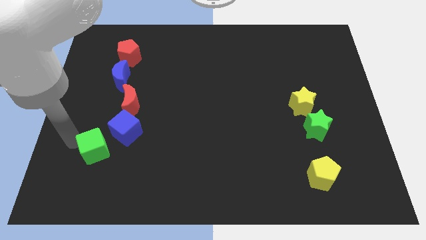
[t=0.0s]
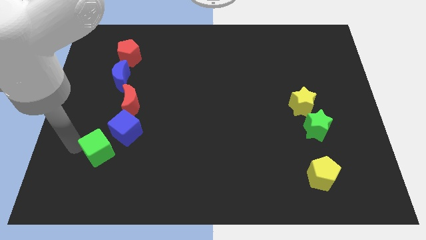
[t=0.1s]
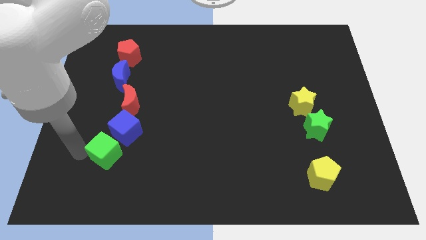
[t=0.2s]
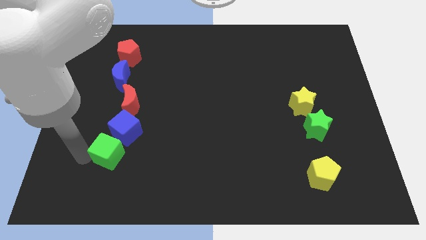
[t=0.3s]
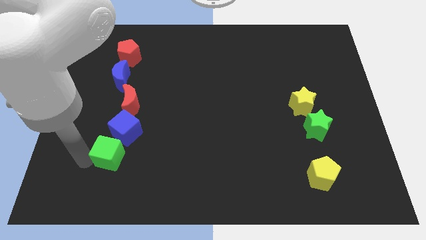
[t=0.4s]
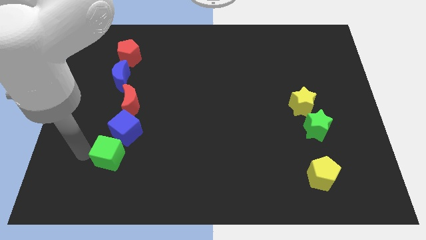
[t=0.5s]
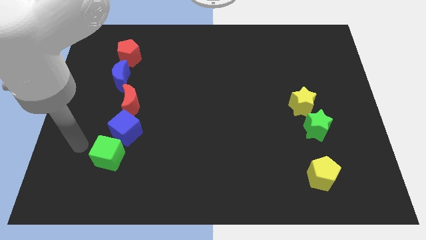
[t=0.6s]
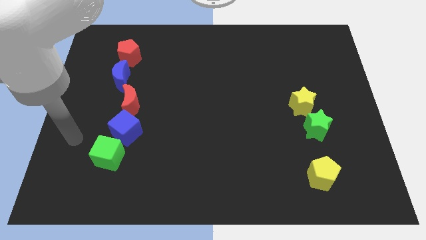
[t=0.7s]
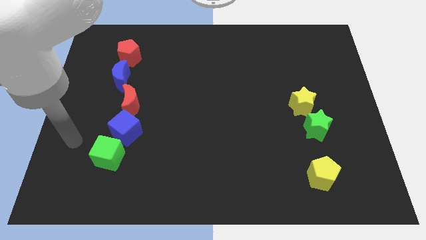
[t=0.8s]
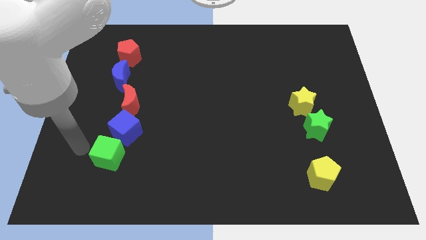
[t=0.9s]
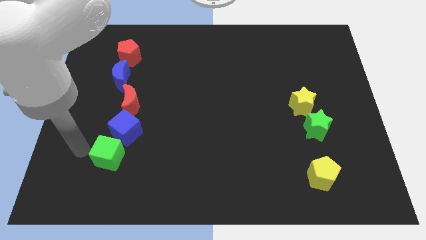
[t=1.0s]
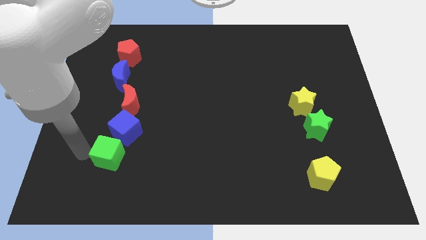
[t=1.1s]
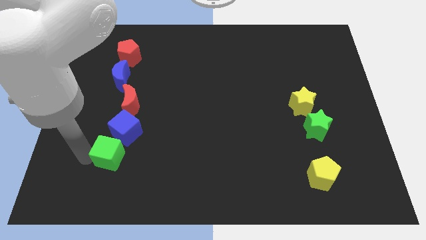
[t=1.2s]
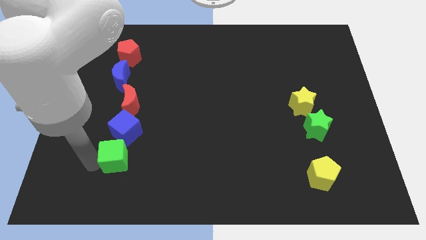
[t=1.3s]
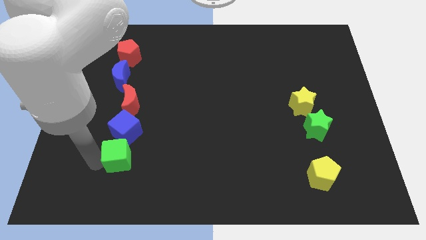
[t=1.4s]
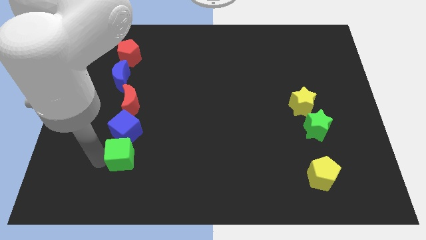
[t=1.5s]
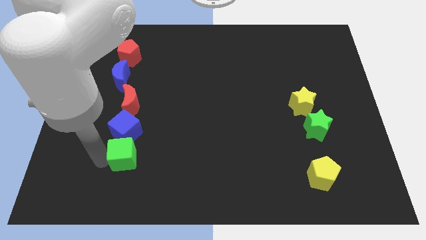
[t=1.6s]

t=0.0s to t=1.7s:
move green cube to the bottom of the blue cube

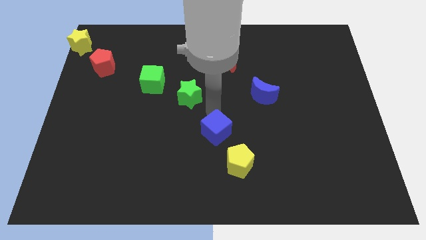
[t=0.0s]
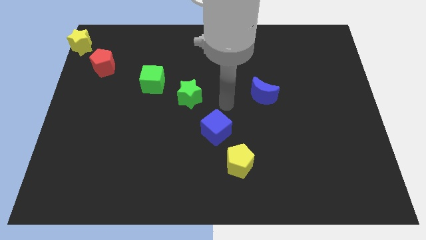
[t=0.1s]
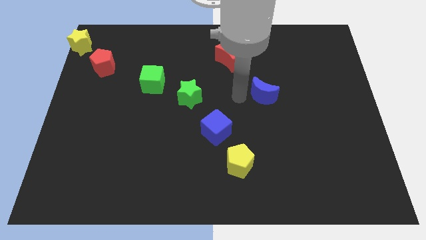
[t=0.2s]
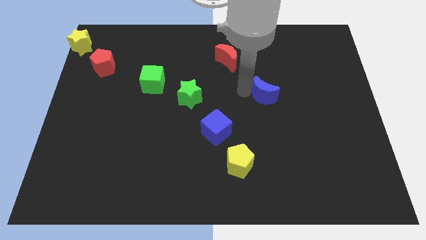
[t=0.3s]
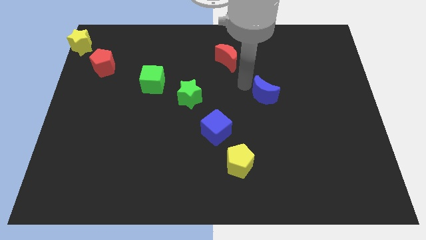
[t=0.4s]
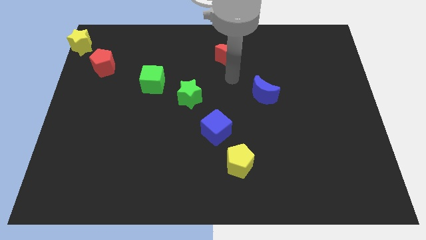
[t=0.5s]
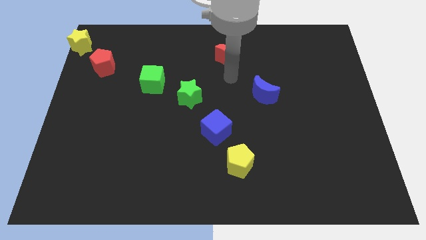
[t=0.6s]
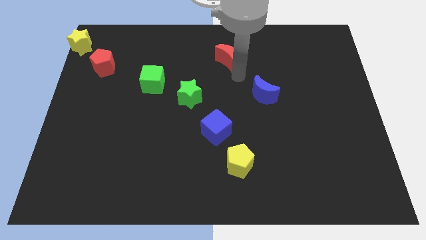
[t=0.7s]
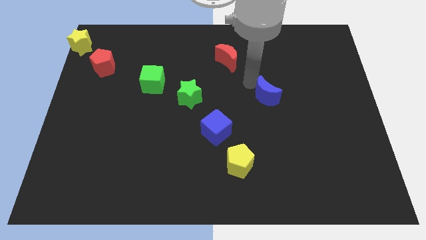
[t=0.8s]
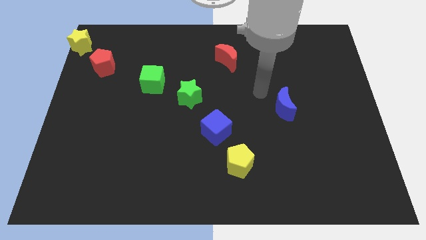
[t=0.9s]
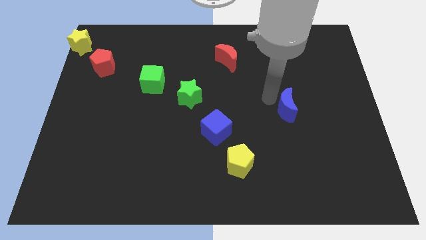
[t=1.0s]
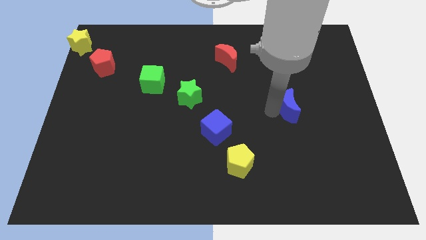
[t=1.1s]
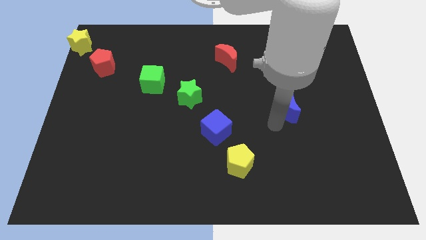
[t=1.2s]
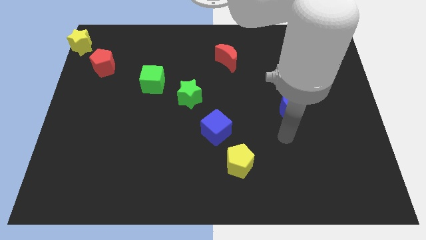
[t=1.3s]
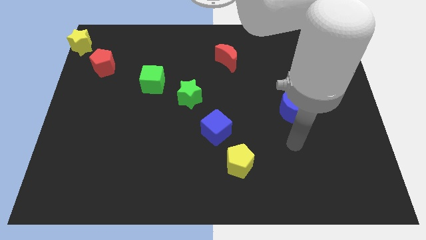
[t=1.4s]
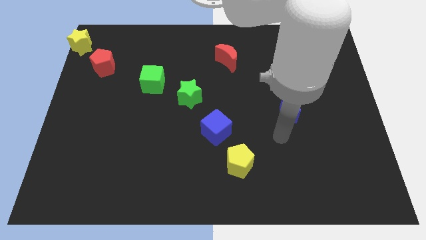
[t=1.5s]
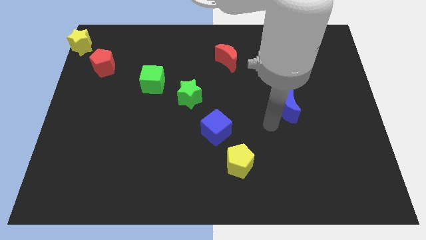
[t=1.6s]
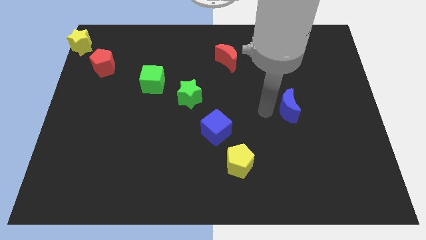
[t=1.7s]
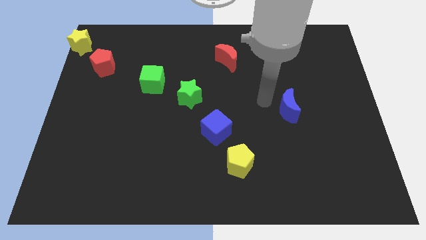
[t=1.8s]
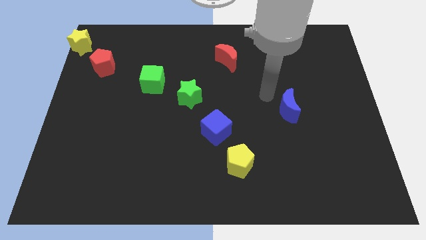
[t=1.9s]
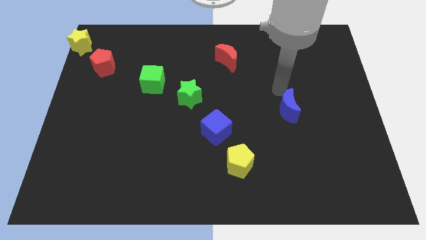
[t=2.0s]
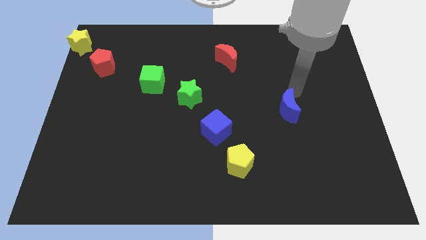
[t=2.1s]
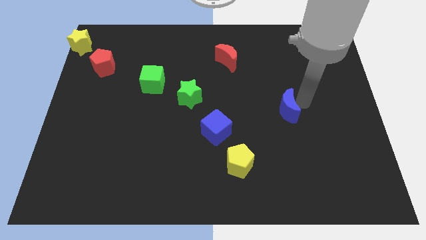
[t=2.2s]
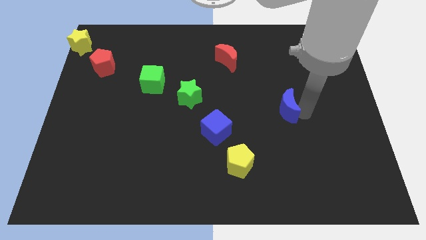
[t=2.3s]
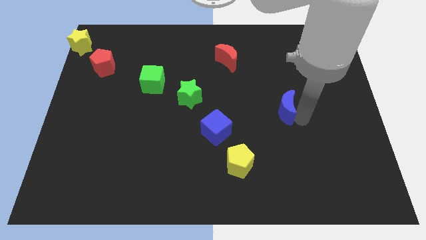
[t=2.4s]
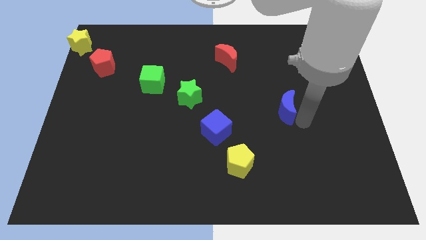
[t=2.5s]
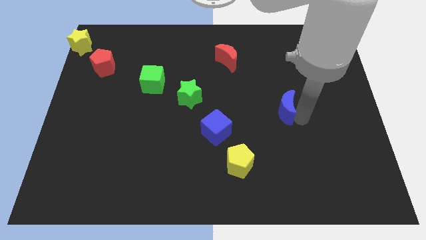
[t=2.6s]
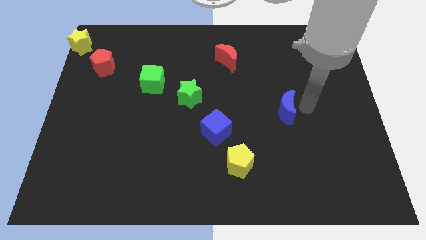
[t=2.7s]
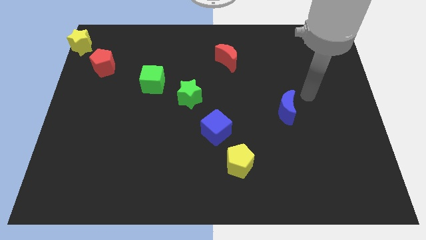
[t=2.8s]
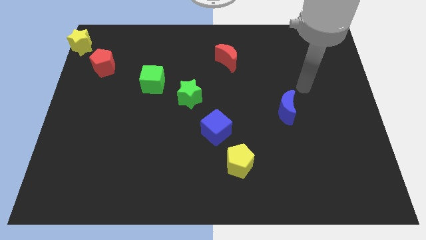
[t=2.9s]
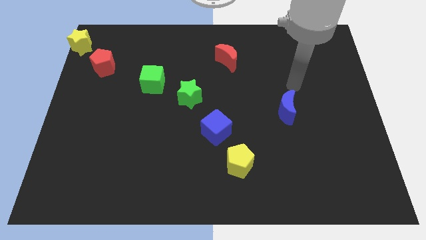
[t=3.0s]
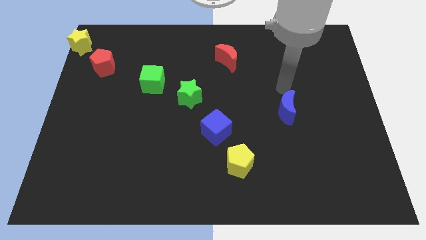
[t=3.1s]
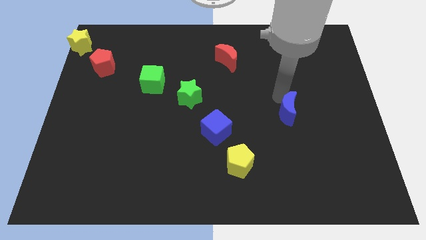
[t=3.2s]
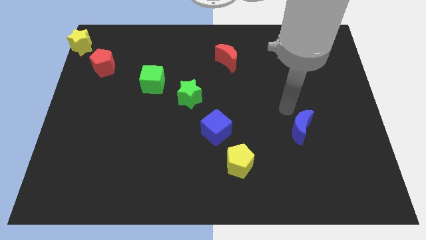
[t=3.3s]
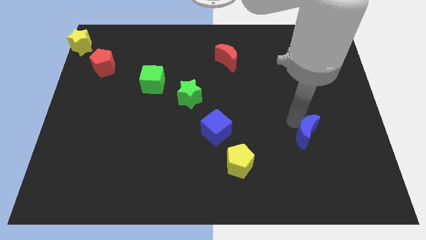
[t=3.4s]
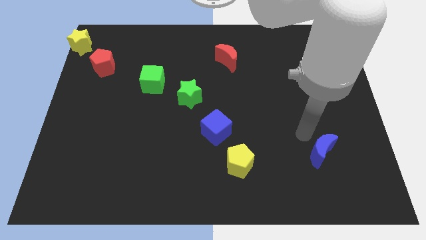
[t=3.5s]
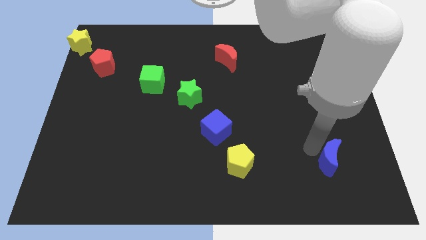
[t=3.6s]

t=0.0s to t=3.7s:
slide the blue moon diagonally bottom right to the blue cube

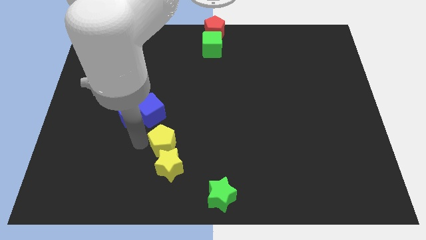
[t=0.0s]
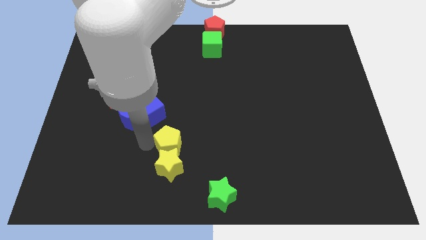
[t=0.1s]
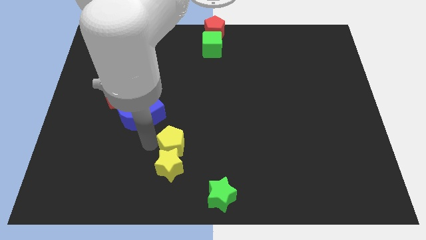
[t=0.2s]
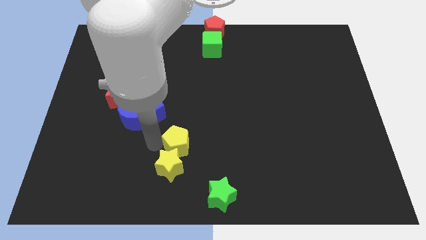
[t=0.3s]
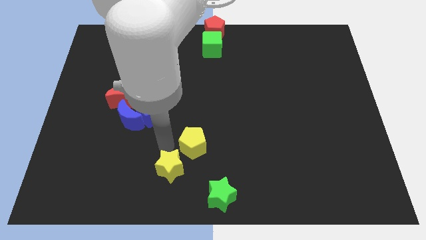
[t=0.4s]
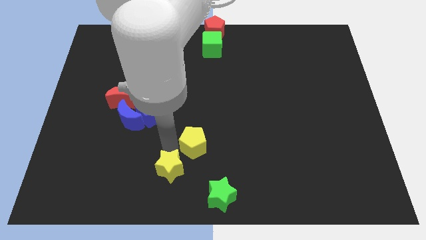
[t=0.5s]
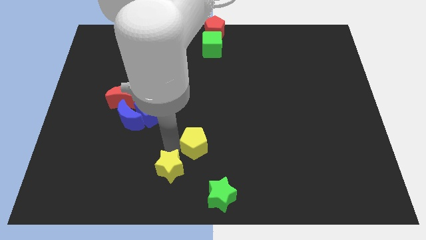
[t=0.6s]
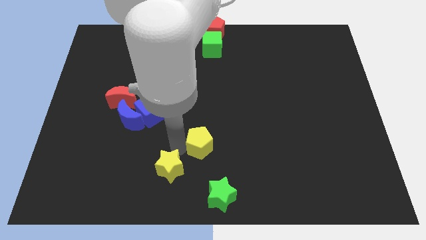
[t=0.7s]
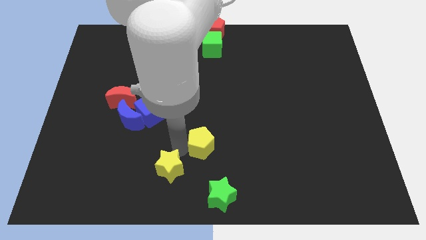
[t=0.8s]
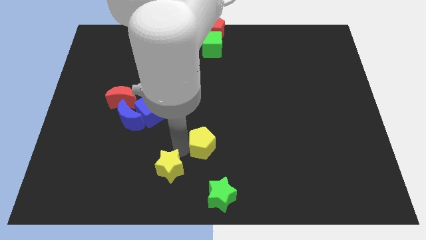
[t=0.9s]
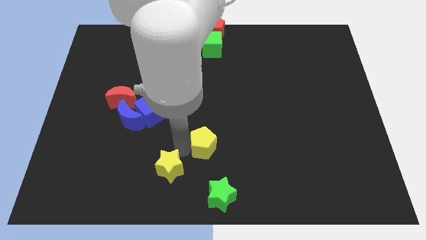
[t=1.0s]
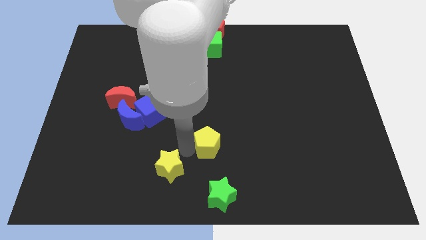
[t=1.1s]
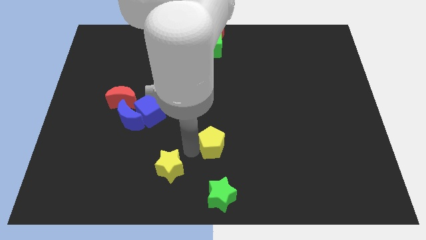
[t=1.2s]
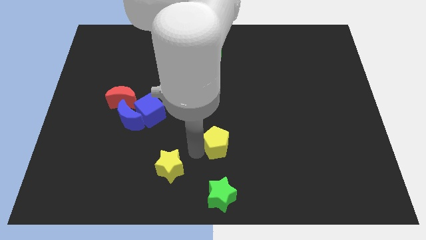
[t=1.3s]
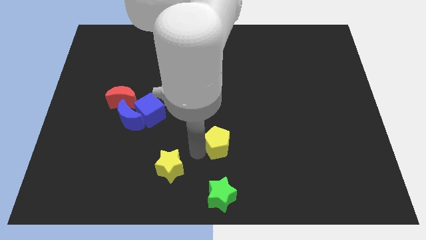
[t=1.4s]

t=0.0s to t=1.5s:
place the yellow pentagon above the green star

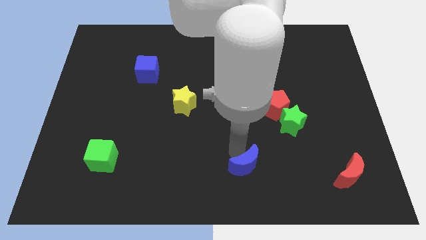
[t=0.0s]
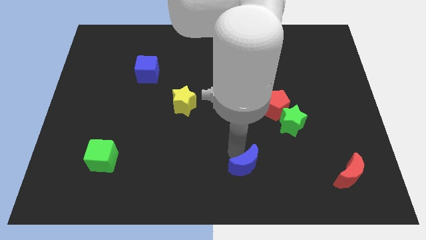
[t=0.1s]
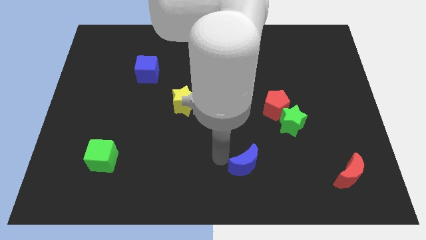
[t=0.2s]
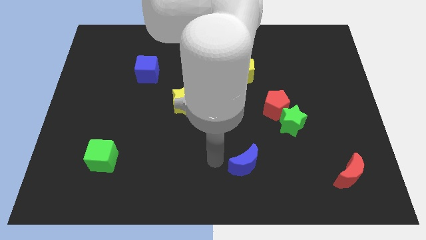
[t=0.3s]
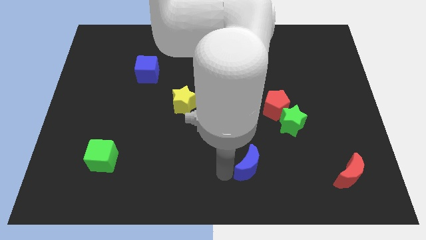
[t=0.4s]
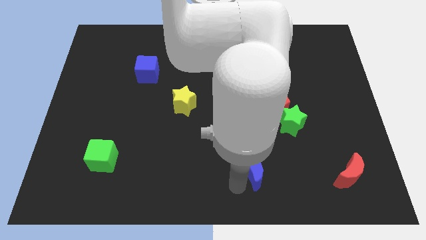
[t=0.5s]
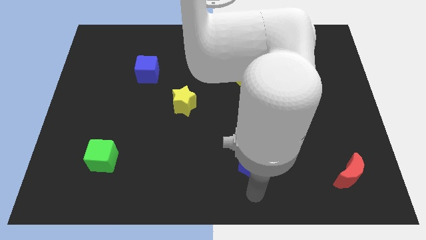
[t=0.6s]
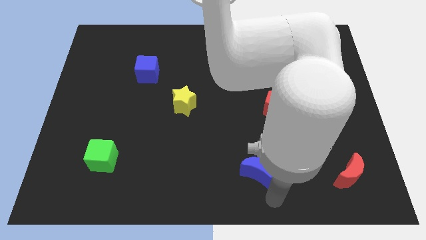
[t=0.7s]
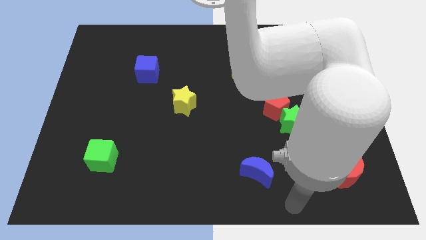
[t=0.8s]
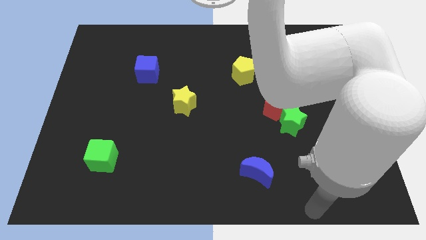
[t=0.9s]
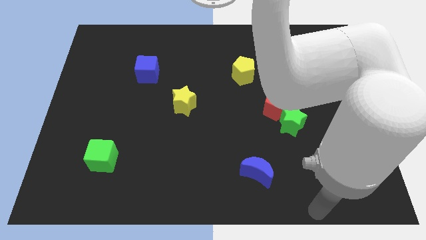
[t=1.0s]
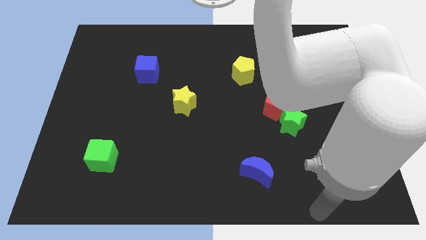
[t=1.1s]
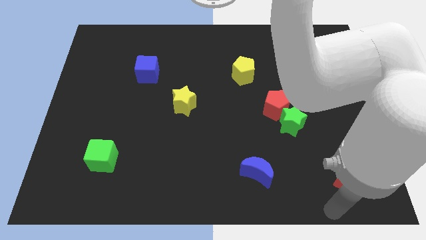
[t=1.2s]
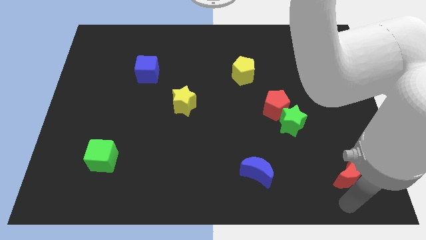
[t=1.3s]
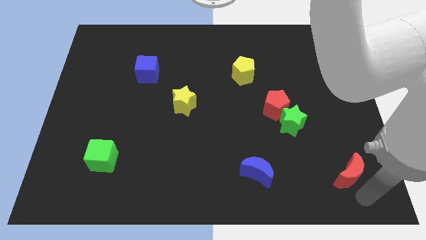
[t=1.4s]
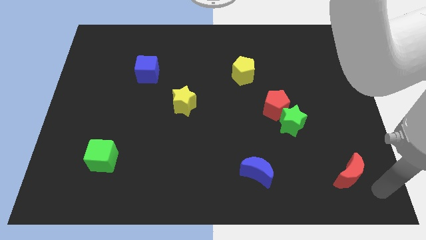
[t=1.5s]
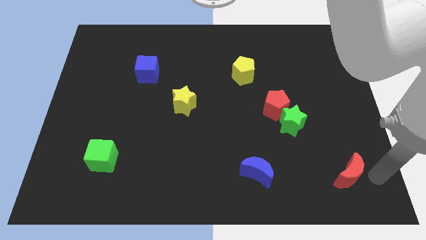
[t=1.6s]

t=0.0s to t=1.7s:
push the blue moon to the left of the red crescent

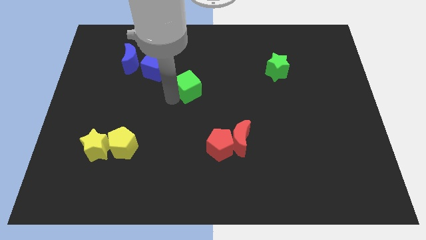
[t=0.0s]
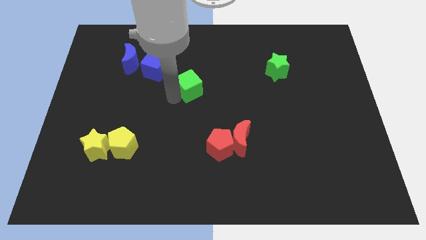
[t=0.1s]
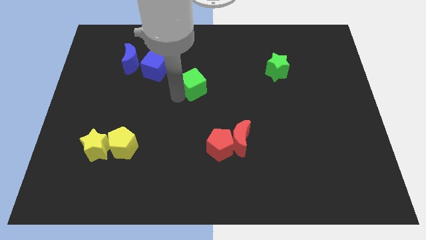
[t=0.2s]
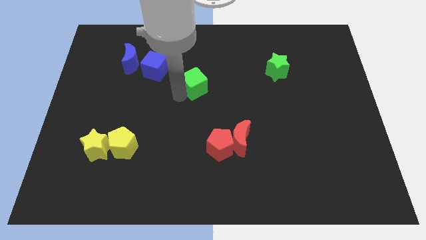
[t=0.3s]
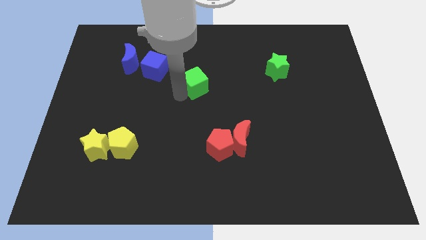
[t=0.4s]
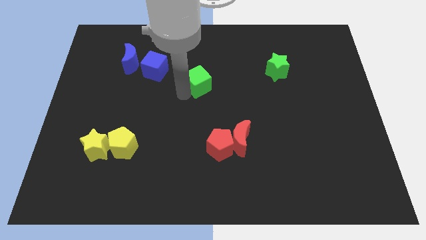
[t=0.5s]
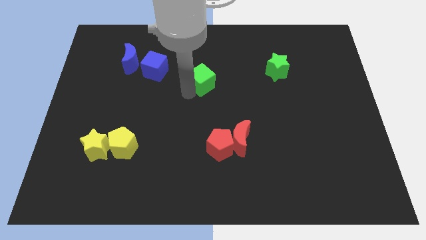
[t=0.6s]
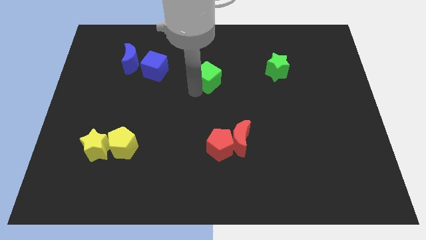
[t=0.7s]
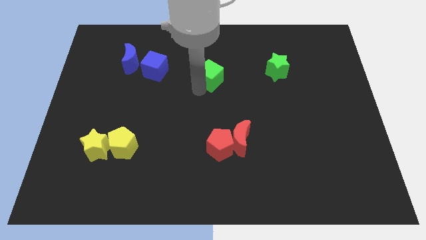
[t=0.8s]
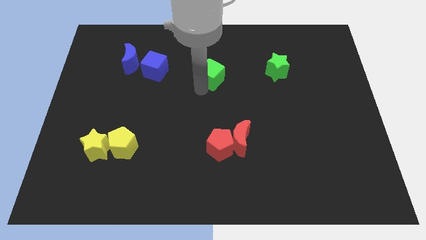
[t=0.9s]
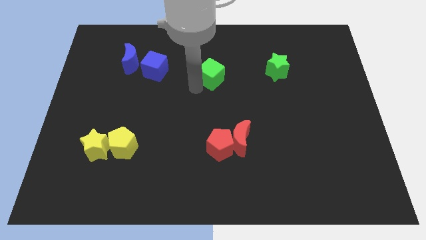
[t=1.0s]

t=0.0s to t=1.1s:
move the green cube to the top of the red pentagon
